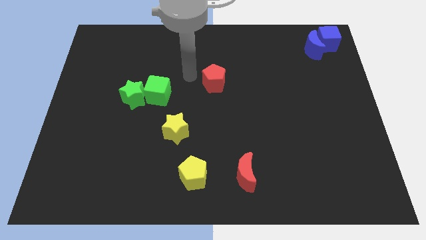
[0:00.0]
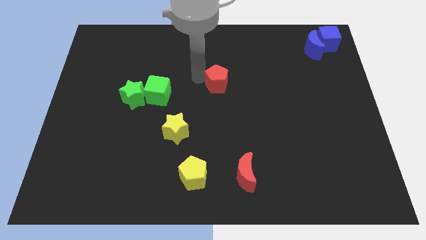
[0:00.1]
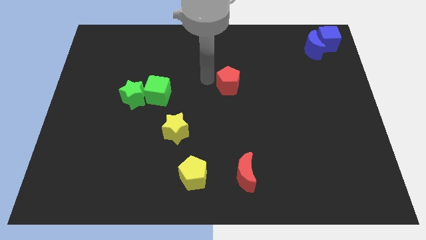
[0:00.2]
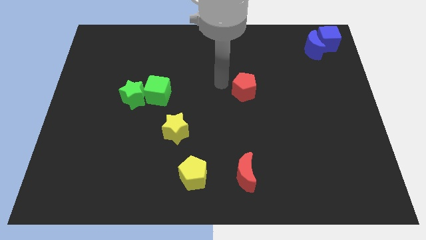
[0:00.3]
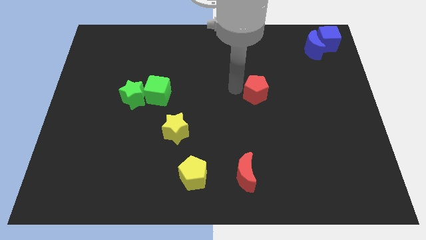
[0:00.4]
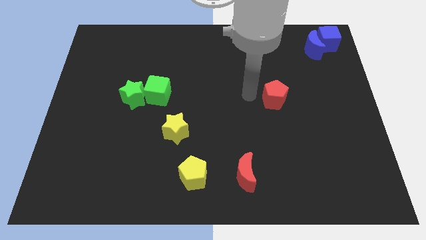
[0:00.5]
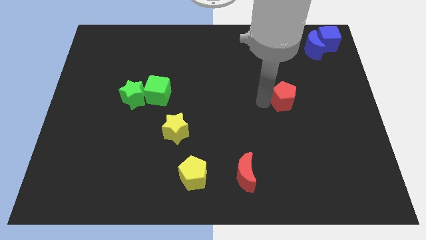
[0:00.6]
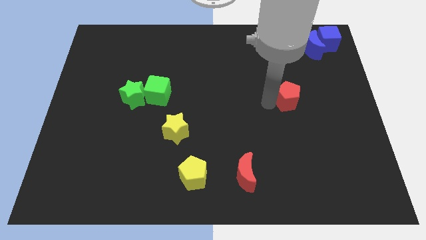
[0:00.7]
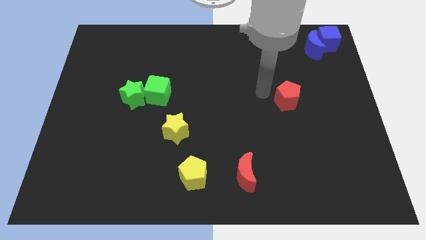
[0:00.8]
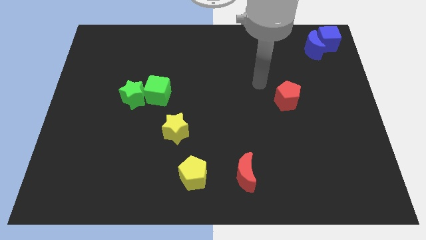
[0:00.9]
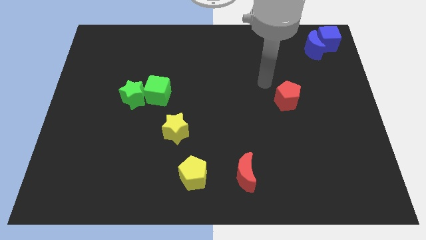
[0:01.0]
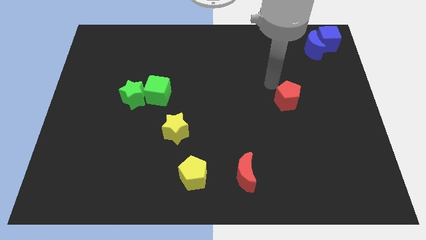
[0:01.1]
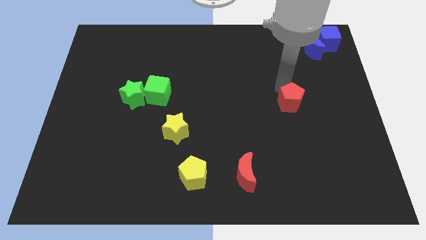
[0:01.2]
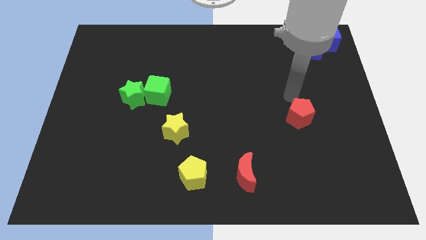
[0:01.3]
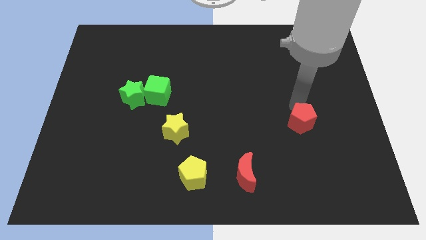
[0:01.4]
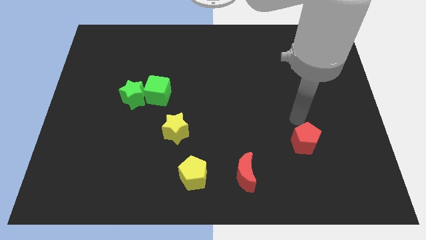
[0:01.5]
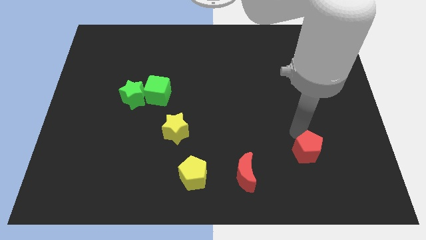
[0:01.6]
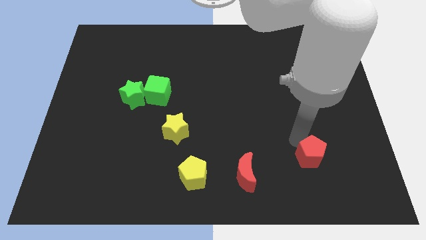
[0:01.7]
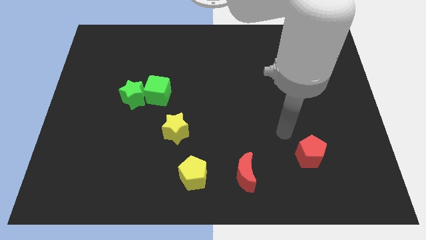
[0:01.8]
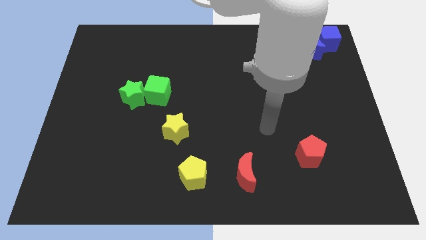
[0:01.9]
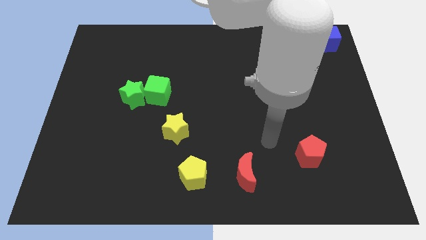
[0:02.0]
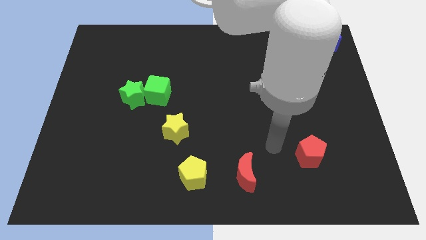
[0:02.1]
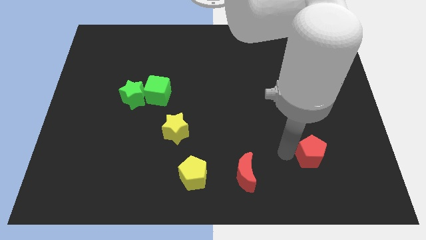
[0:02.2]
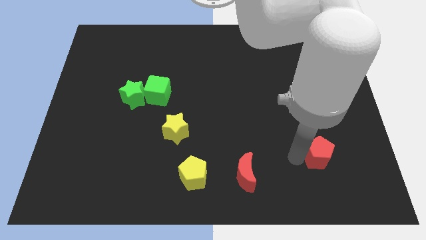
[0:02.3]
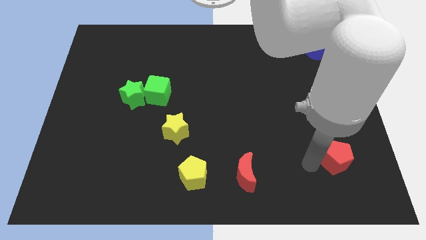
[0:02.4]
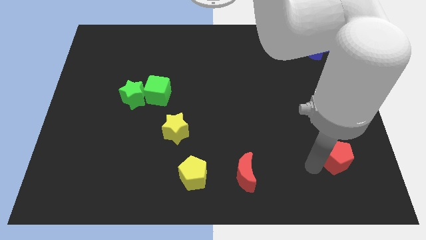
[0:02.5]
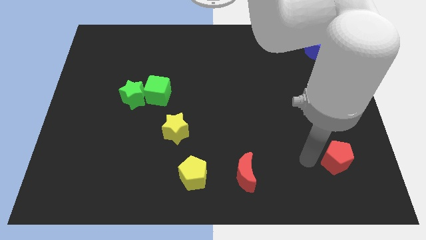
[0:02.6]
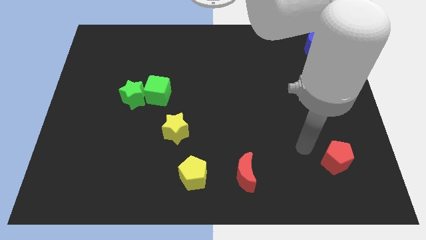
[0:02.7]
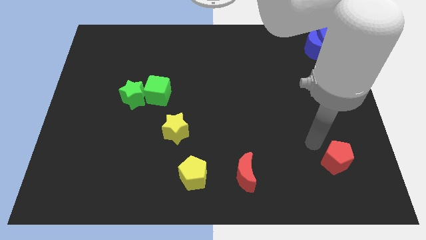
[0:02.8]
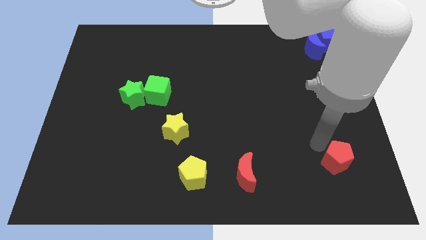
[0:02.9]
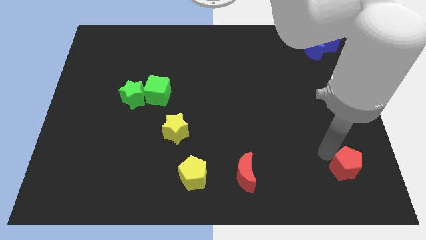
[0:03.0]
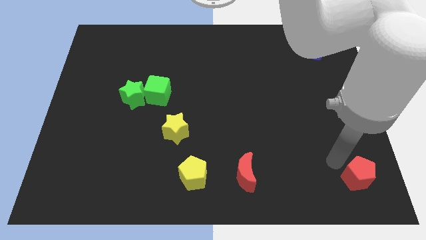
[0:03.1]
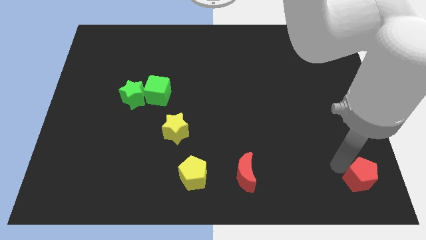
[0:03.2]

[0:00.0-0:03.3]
place the red pentagon diagonally top right to red moon

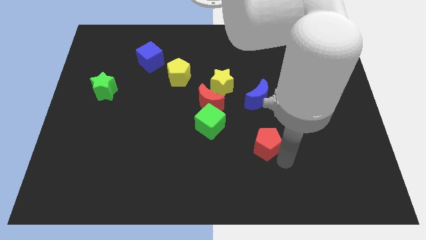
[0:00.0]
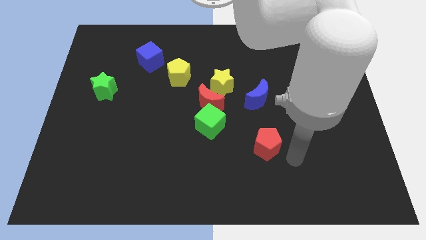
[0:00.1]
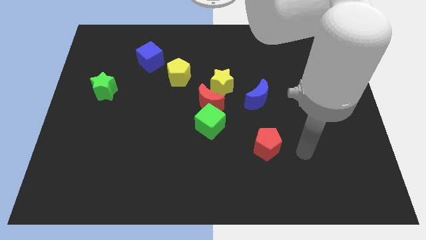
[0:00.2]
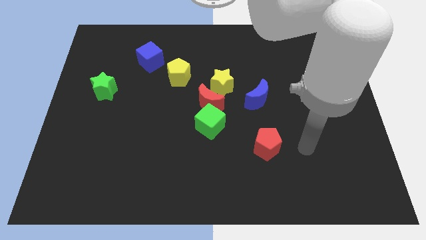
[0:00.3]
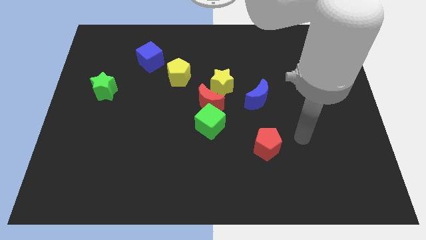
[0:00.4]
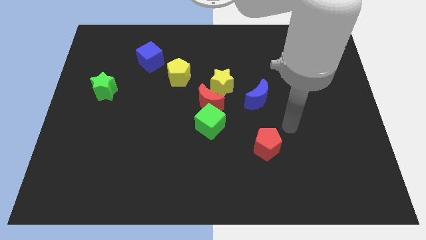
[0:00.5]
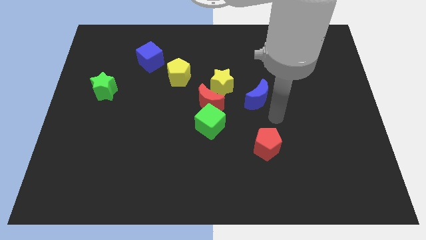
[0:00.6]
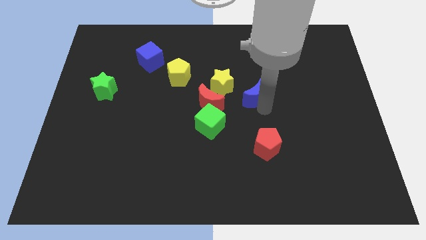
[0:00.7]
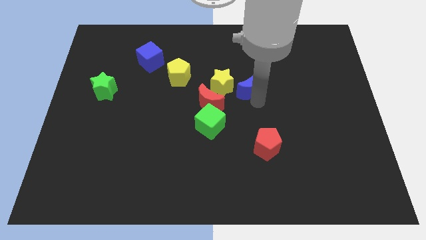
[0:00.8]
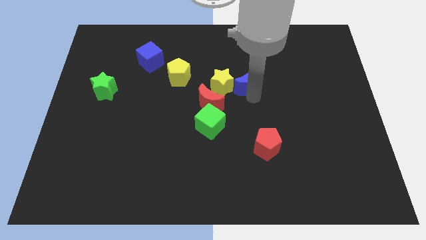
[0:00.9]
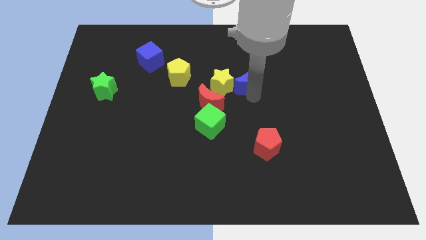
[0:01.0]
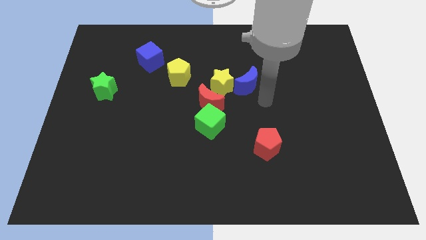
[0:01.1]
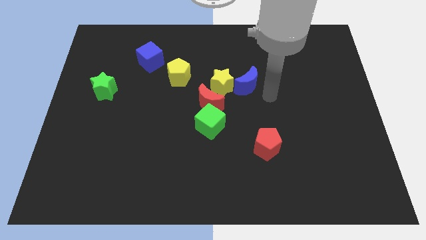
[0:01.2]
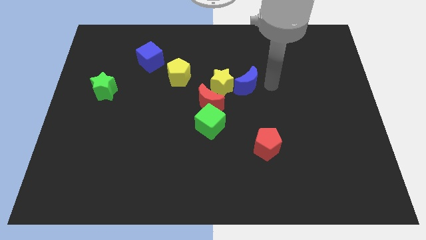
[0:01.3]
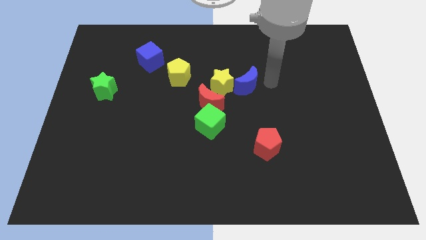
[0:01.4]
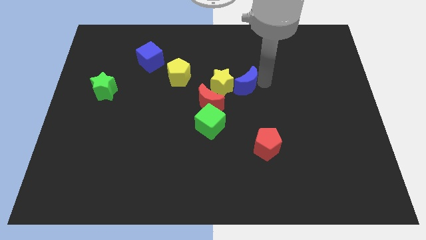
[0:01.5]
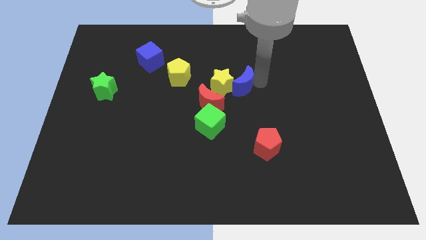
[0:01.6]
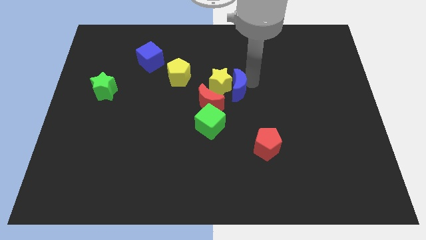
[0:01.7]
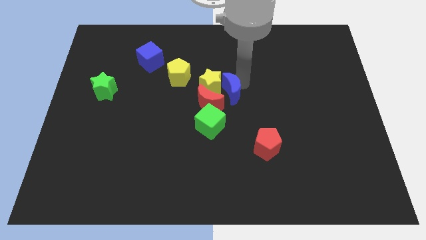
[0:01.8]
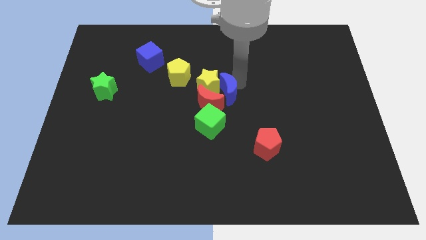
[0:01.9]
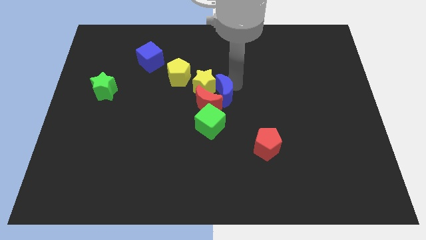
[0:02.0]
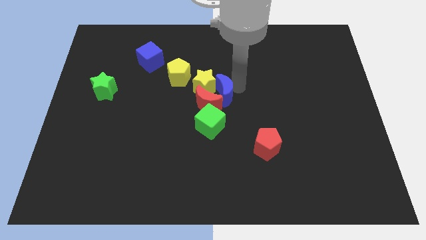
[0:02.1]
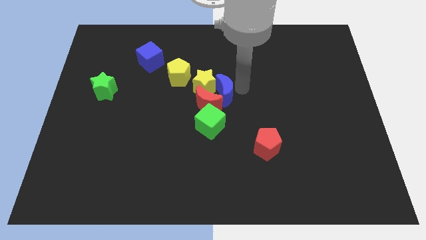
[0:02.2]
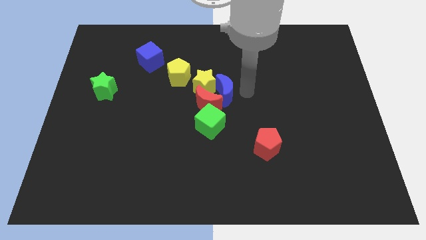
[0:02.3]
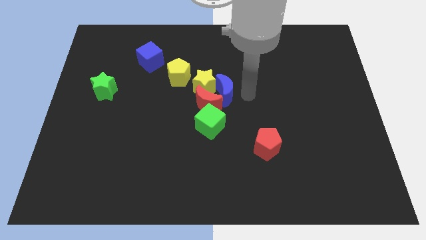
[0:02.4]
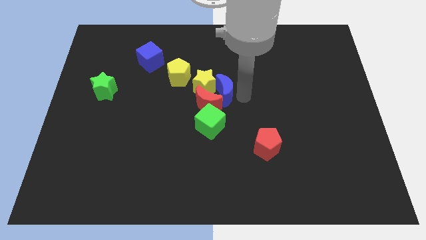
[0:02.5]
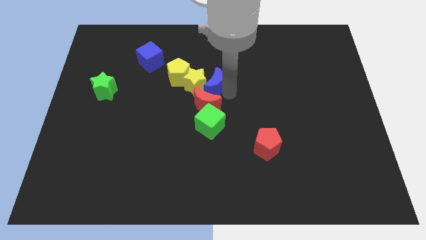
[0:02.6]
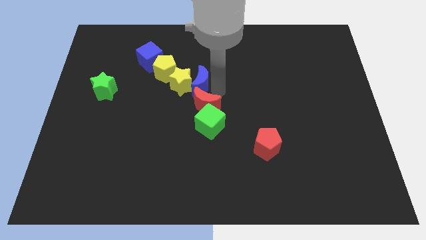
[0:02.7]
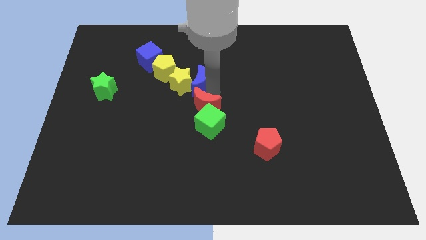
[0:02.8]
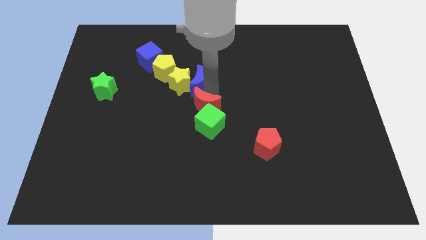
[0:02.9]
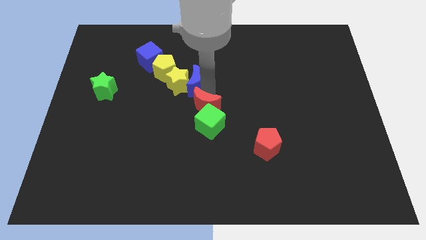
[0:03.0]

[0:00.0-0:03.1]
push the blue crescent into the yellow pentagon

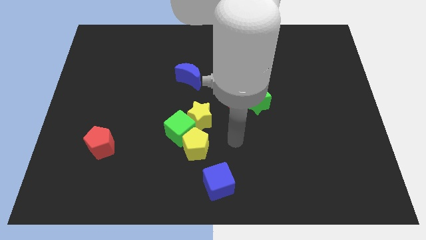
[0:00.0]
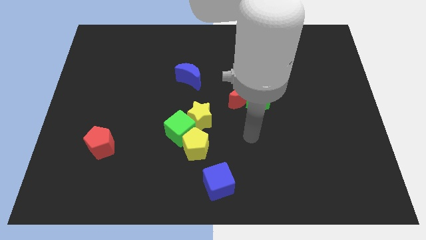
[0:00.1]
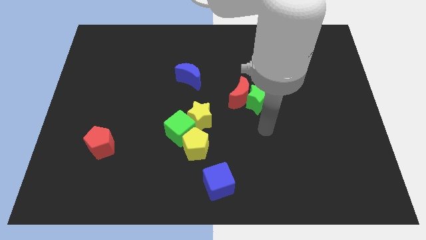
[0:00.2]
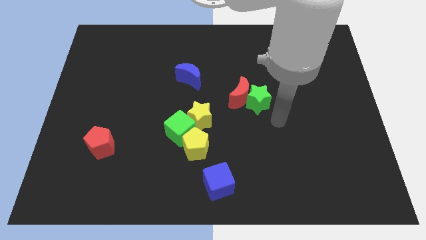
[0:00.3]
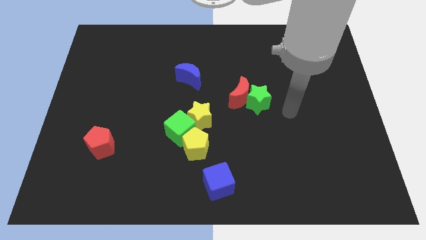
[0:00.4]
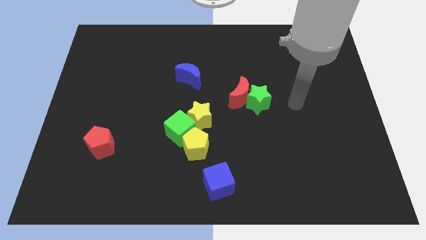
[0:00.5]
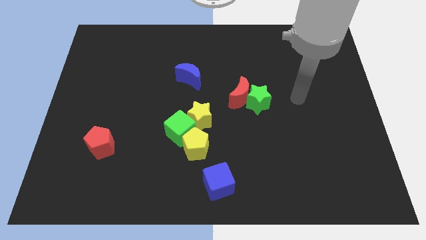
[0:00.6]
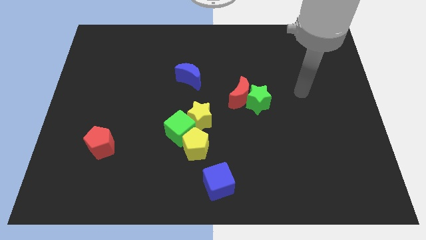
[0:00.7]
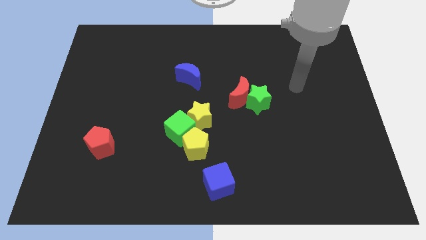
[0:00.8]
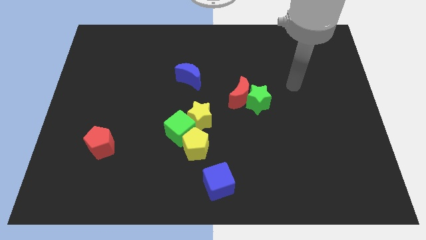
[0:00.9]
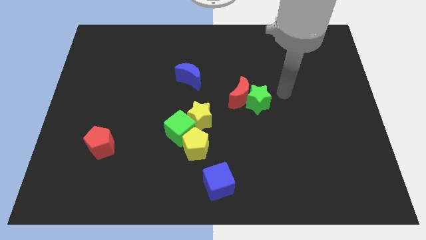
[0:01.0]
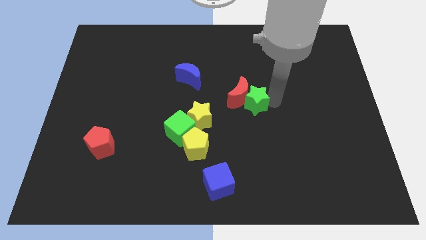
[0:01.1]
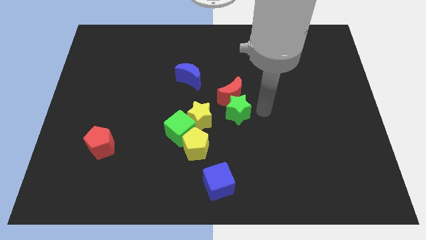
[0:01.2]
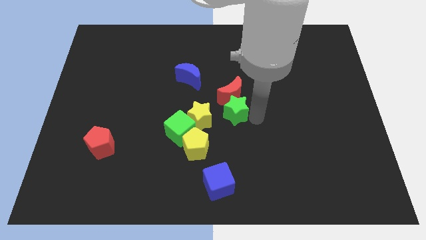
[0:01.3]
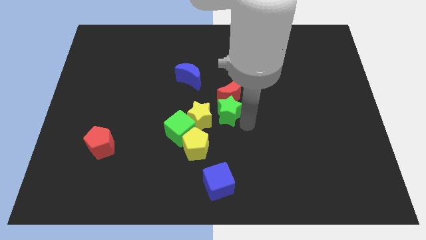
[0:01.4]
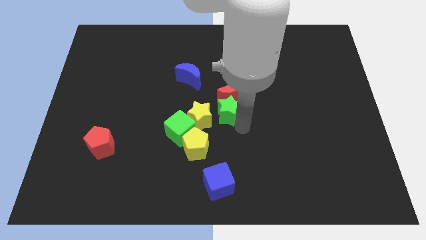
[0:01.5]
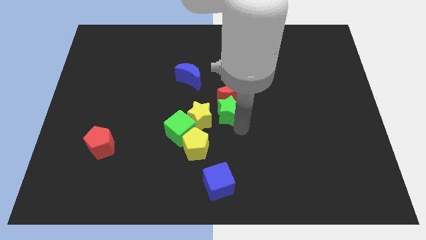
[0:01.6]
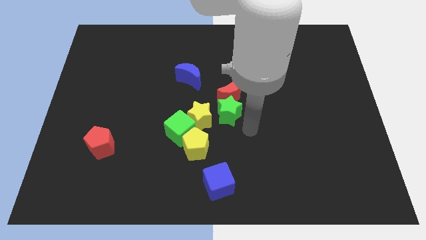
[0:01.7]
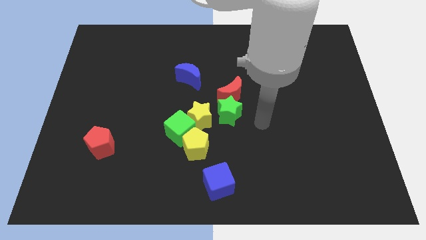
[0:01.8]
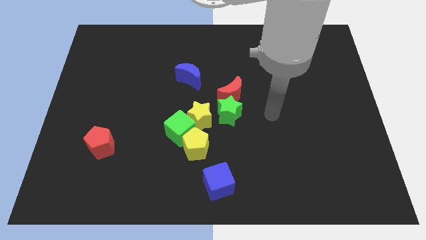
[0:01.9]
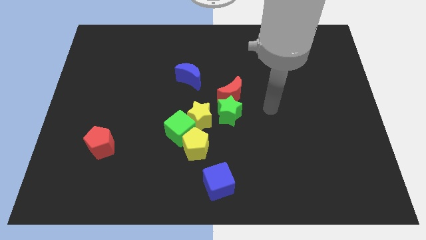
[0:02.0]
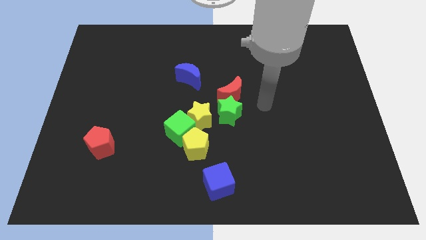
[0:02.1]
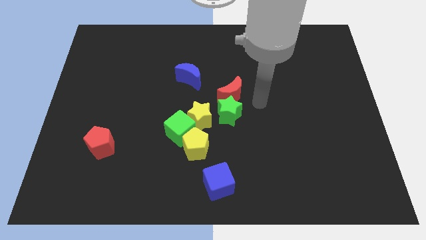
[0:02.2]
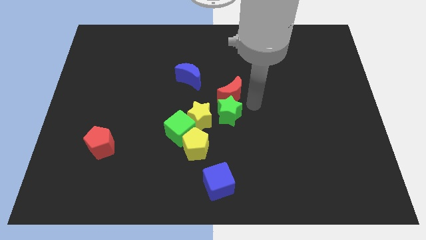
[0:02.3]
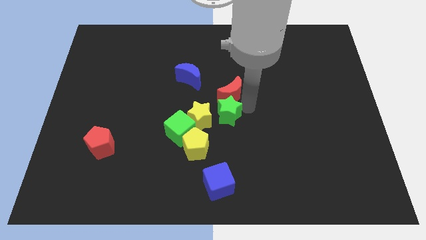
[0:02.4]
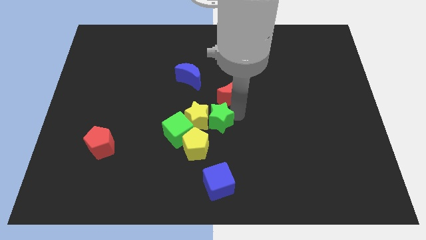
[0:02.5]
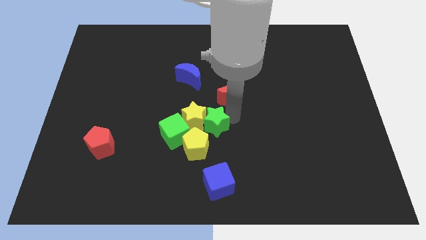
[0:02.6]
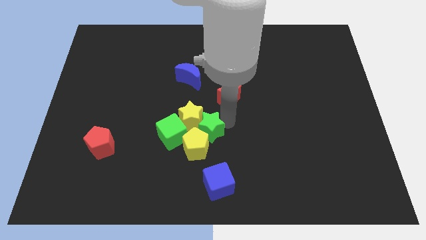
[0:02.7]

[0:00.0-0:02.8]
push the green star towards the yellow blocks
